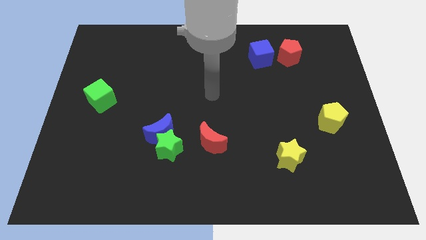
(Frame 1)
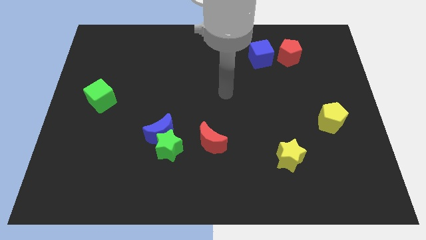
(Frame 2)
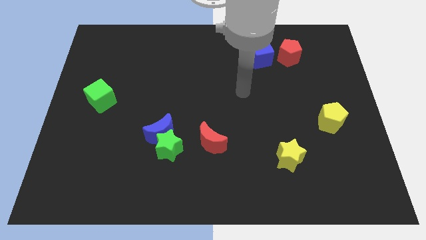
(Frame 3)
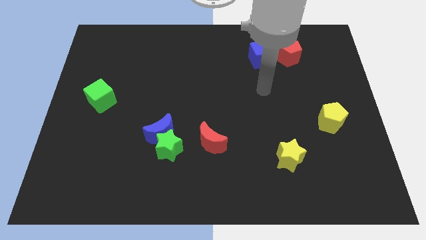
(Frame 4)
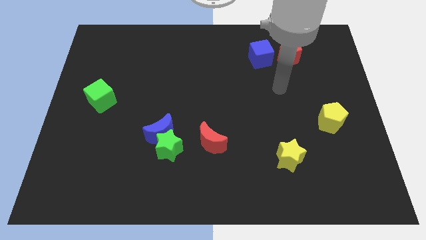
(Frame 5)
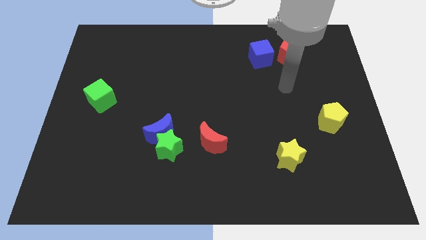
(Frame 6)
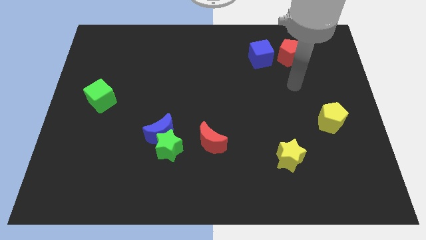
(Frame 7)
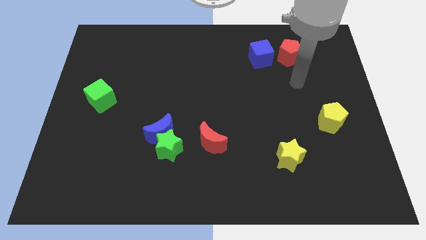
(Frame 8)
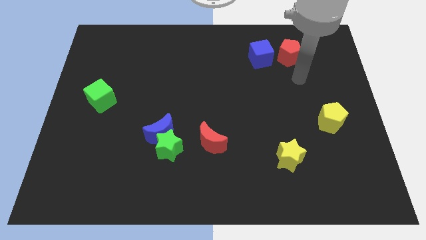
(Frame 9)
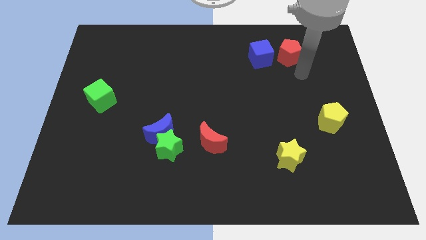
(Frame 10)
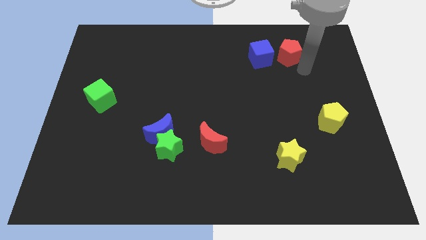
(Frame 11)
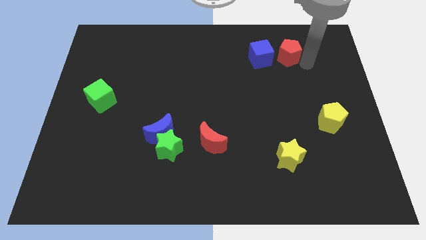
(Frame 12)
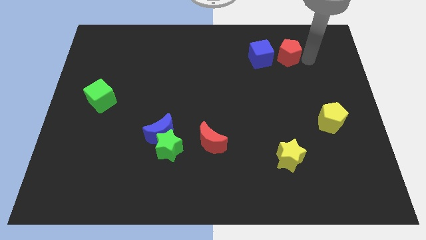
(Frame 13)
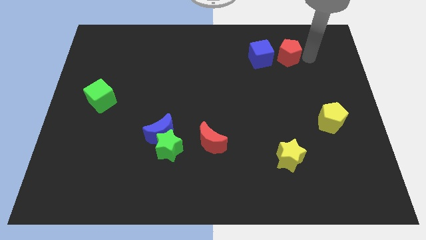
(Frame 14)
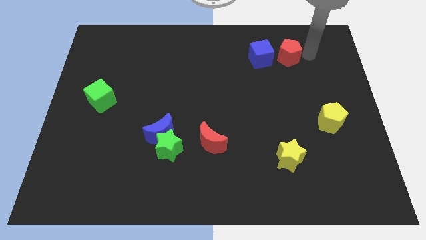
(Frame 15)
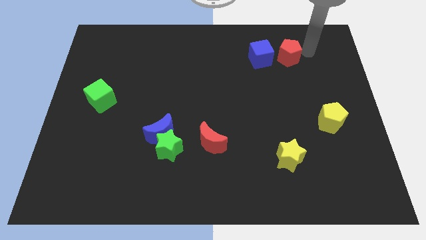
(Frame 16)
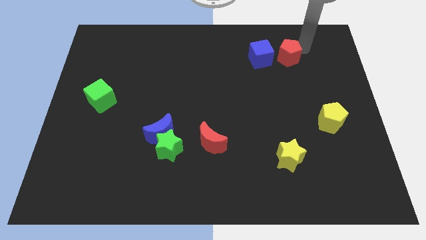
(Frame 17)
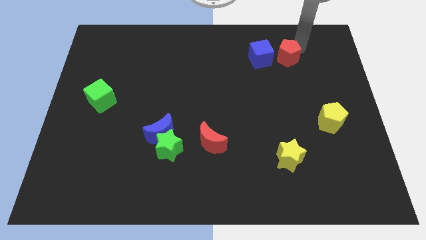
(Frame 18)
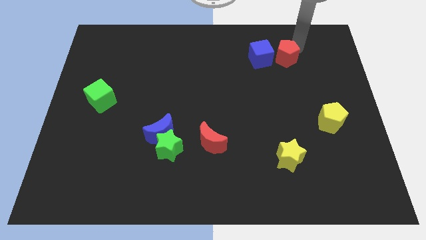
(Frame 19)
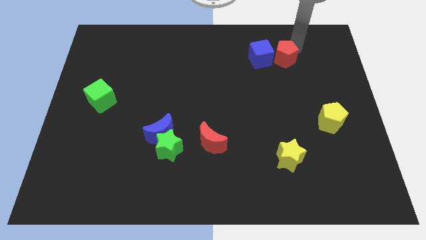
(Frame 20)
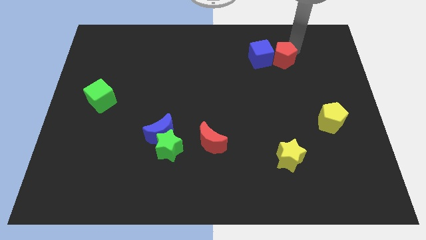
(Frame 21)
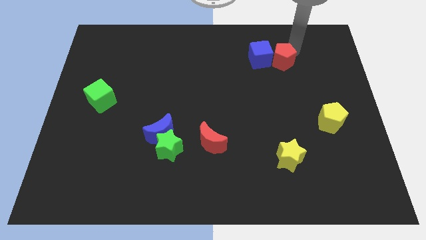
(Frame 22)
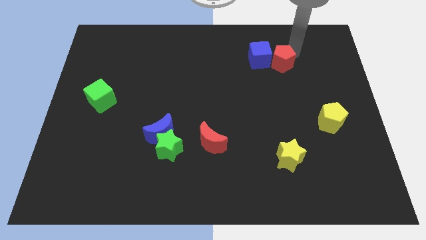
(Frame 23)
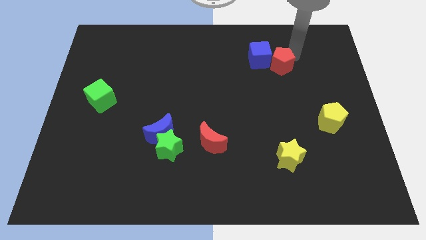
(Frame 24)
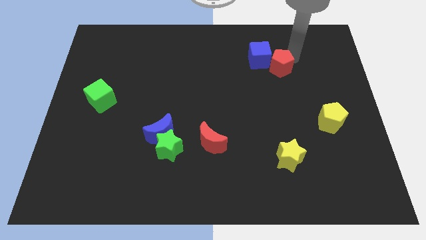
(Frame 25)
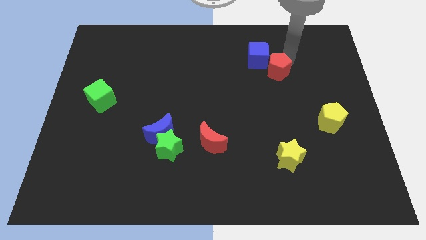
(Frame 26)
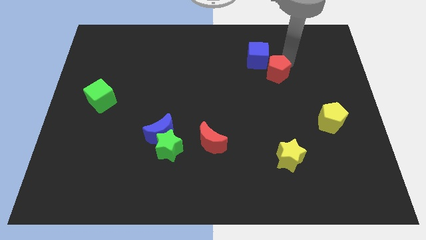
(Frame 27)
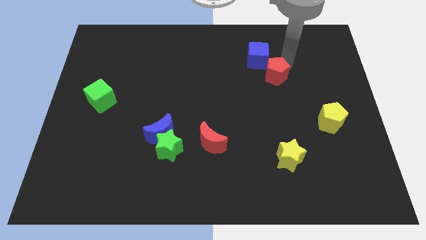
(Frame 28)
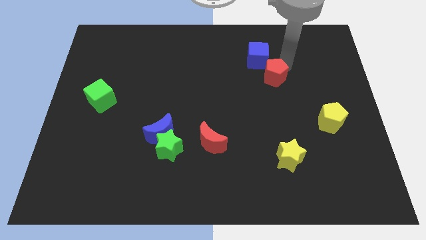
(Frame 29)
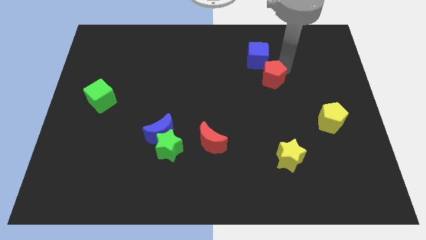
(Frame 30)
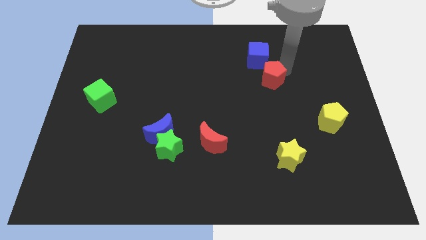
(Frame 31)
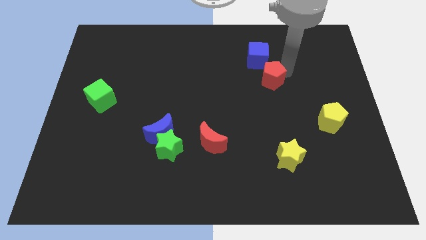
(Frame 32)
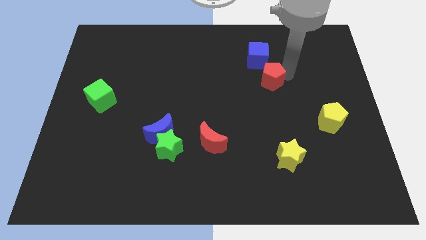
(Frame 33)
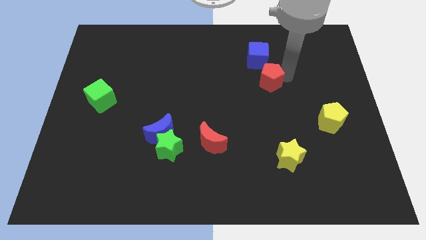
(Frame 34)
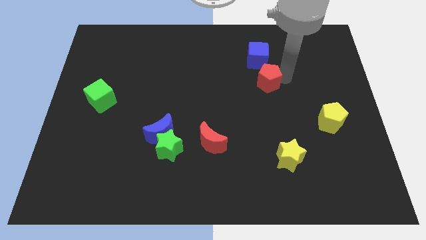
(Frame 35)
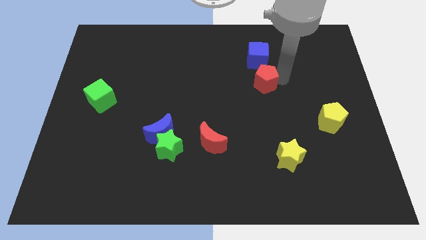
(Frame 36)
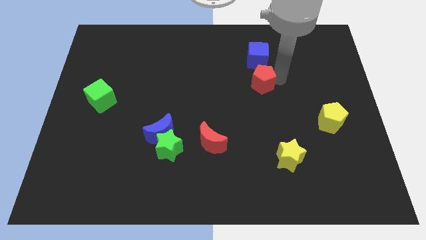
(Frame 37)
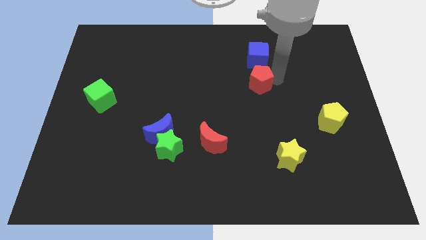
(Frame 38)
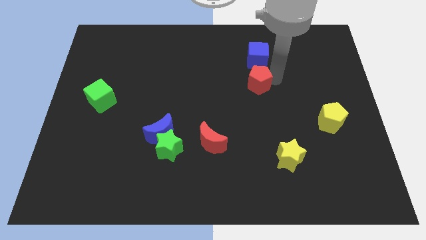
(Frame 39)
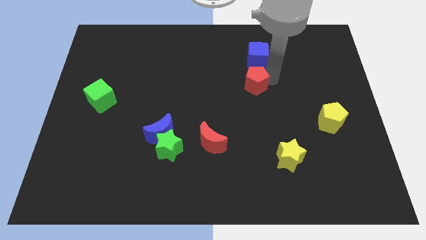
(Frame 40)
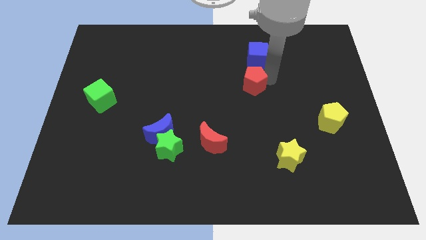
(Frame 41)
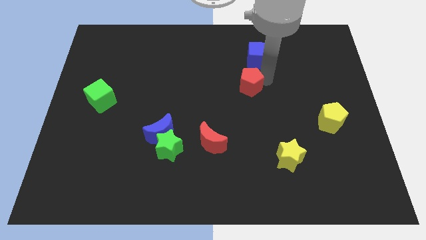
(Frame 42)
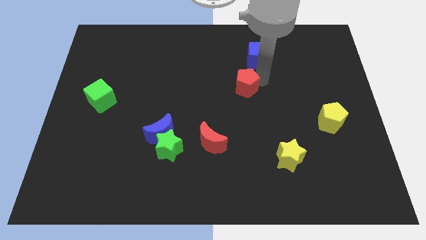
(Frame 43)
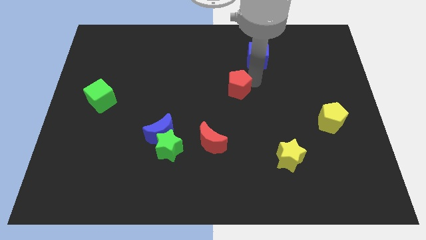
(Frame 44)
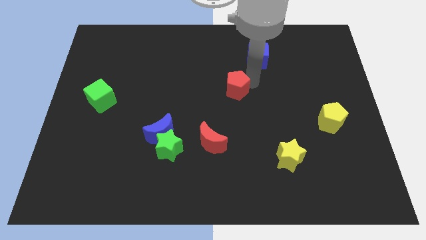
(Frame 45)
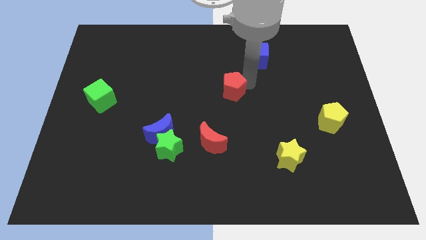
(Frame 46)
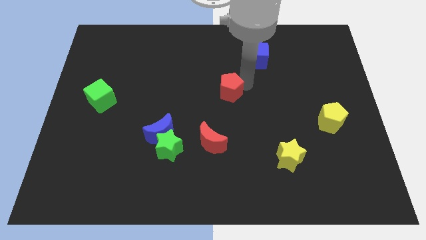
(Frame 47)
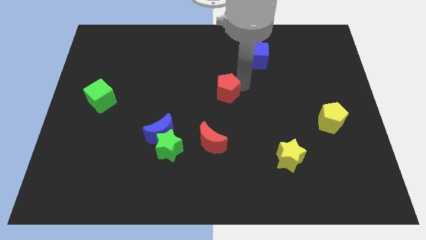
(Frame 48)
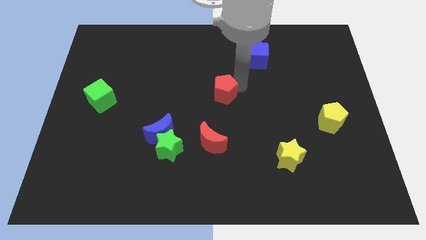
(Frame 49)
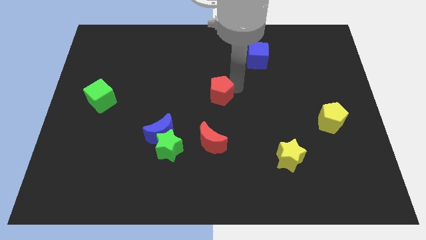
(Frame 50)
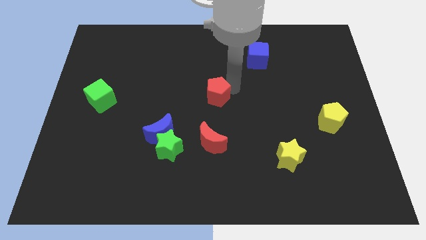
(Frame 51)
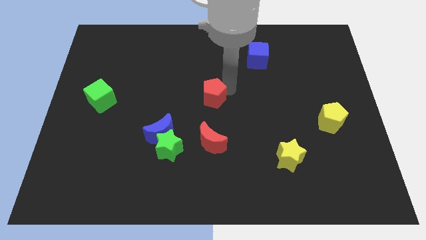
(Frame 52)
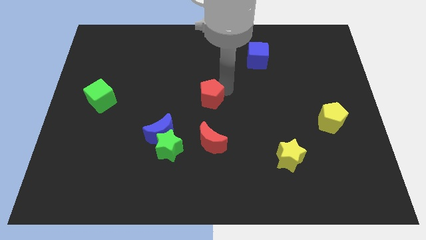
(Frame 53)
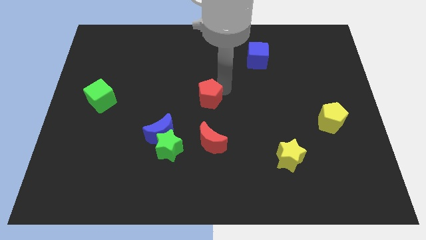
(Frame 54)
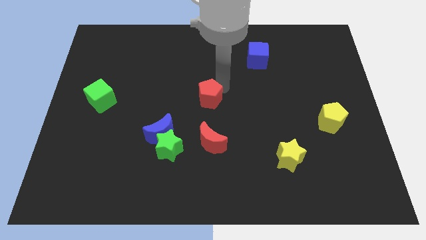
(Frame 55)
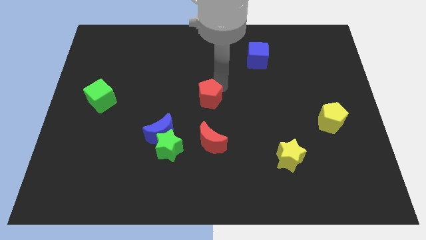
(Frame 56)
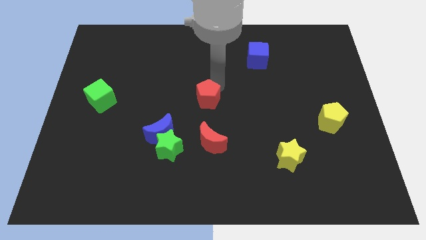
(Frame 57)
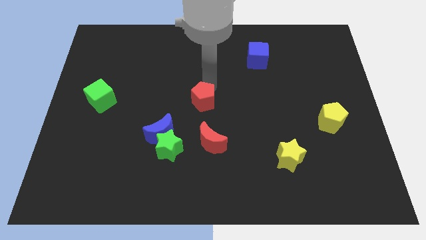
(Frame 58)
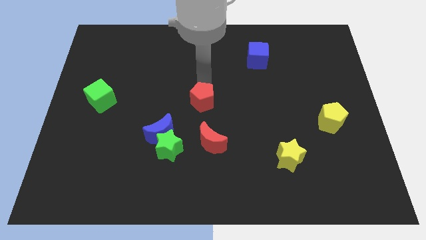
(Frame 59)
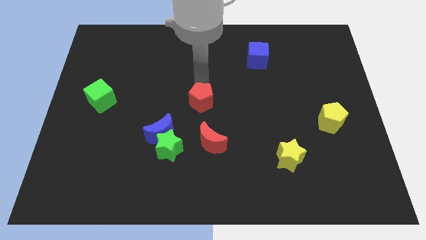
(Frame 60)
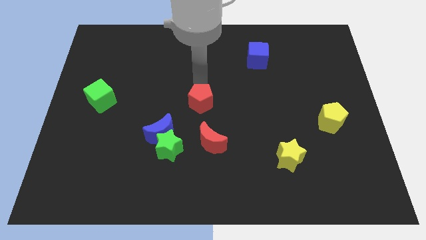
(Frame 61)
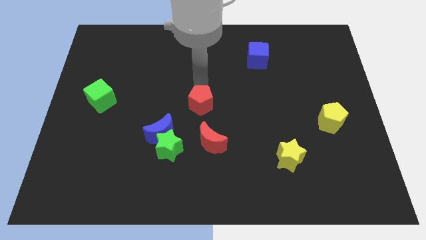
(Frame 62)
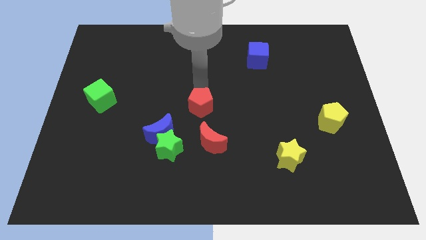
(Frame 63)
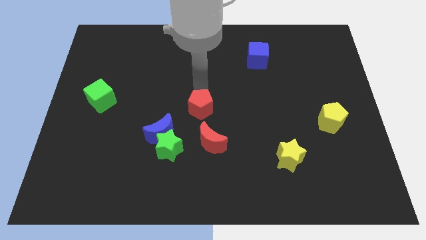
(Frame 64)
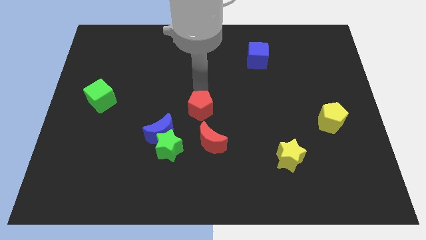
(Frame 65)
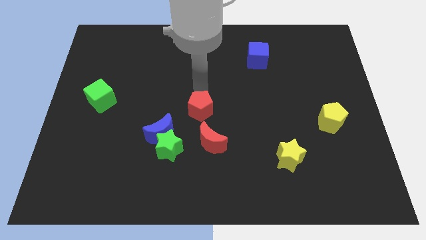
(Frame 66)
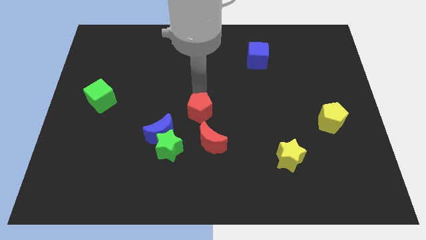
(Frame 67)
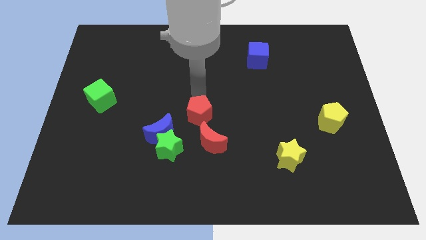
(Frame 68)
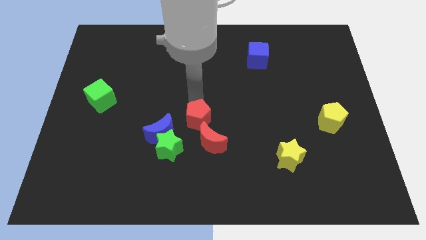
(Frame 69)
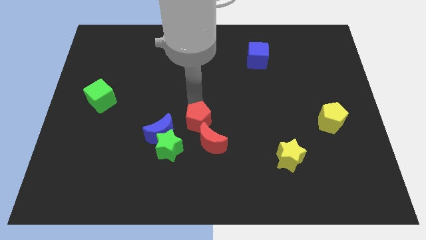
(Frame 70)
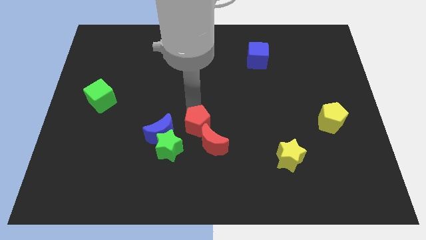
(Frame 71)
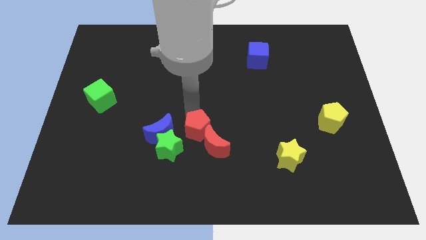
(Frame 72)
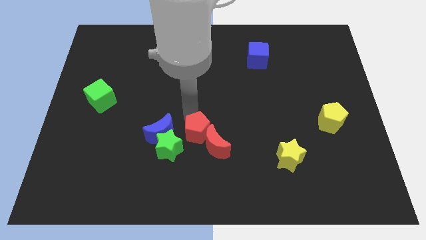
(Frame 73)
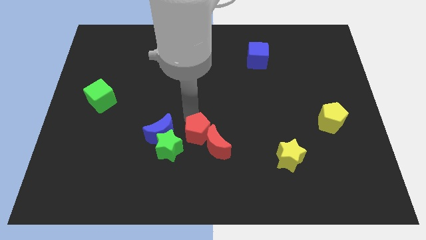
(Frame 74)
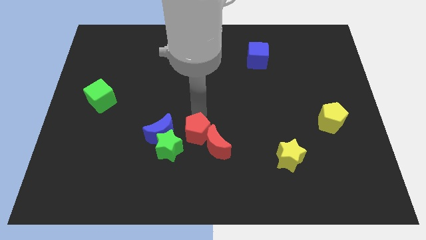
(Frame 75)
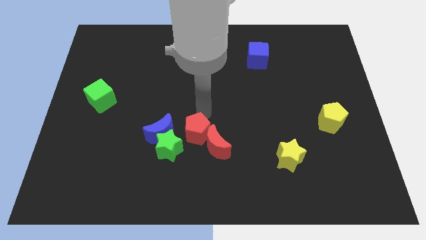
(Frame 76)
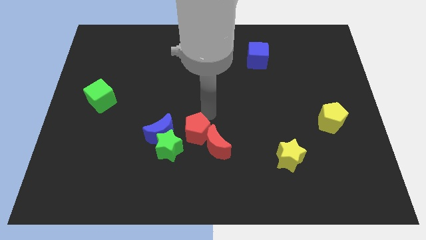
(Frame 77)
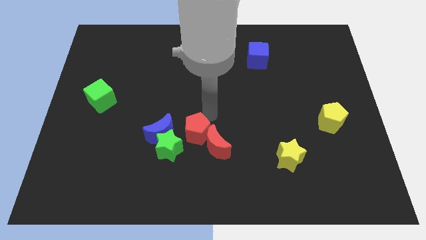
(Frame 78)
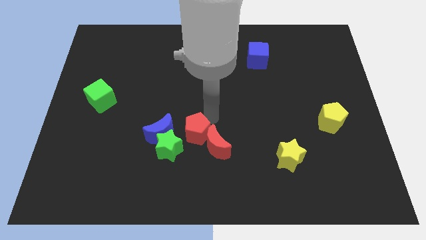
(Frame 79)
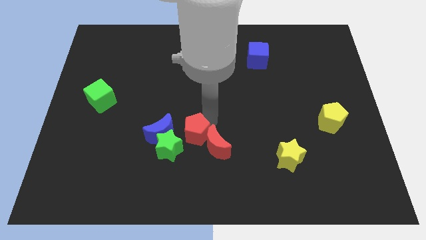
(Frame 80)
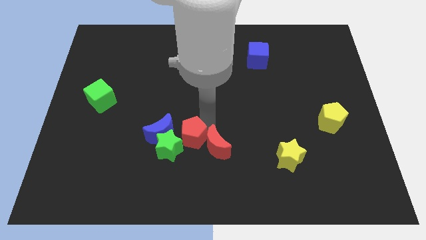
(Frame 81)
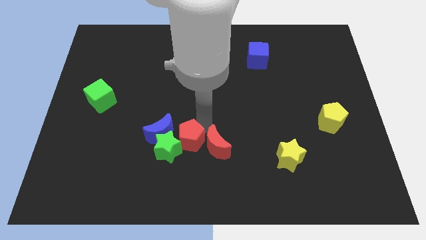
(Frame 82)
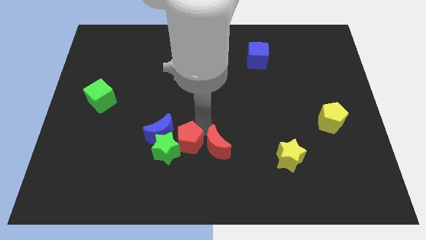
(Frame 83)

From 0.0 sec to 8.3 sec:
put the red pentagon to the green star
